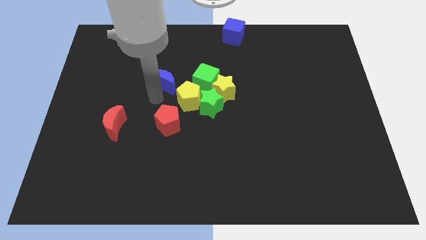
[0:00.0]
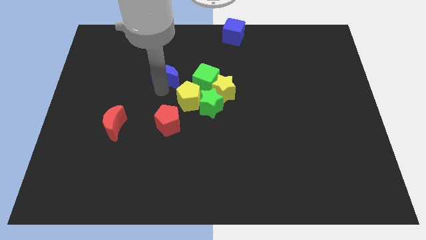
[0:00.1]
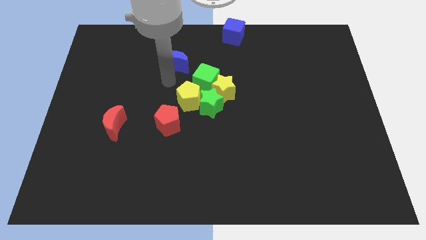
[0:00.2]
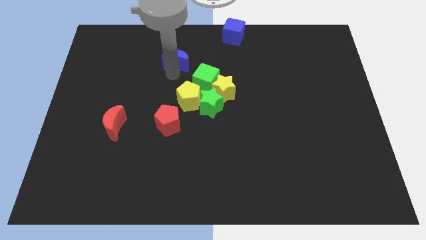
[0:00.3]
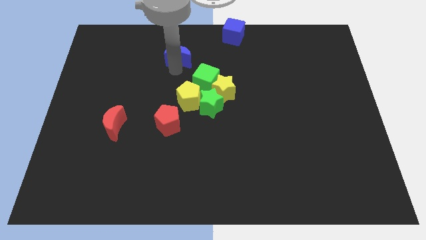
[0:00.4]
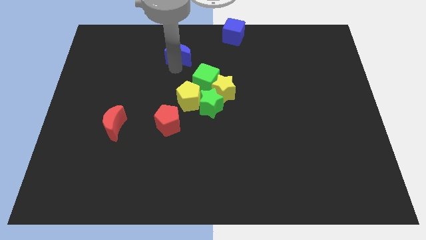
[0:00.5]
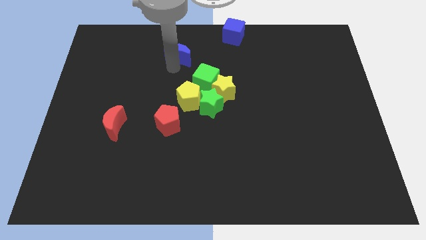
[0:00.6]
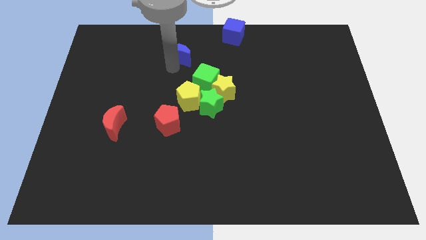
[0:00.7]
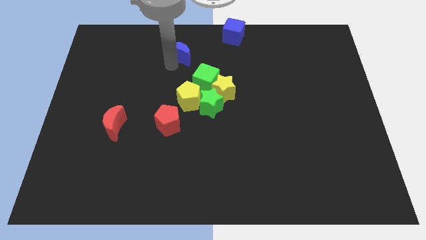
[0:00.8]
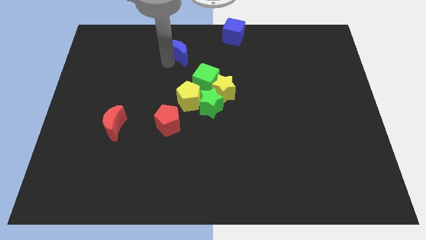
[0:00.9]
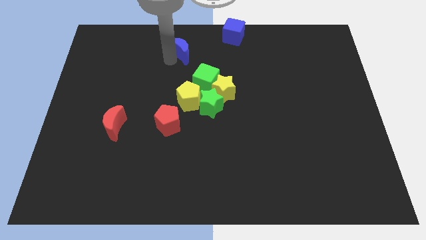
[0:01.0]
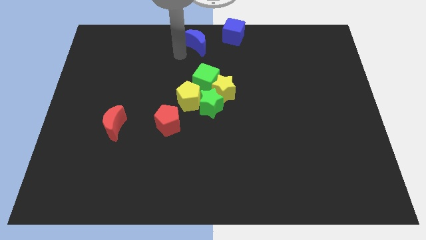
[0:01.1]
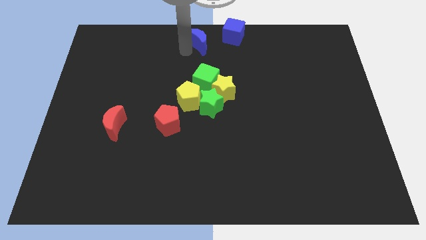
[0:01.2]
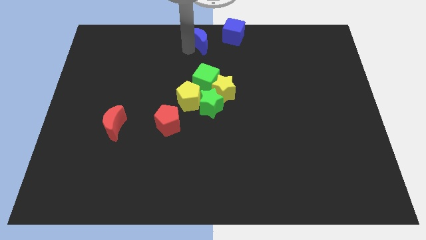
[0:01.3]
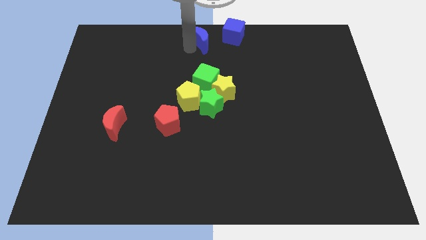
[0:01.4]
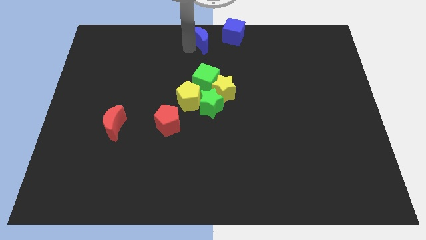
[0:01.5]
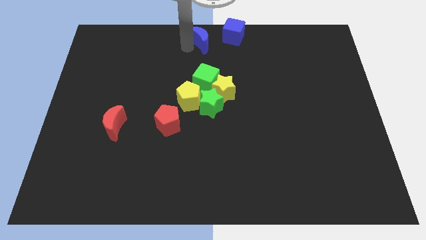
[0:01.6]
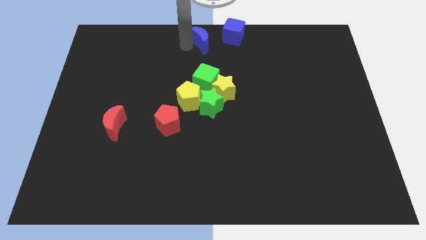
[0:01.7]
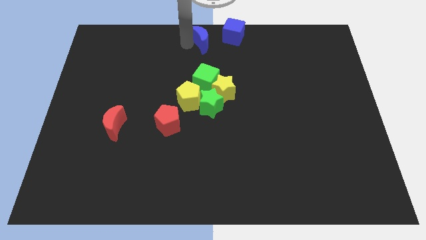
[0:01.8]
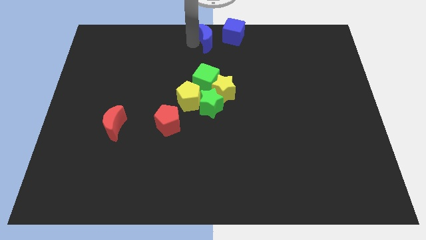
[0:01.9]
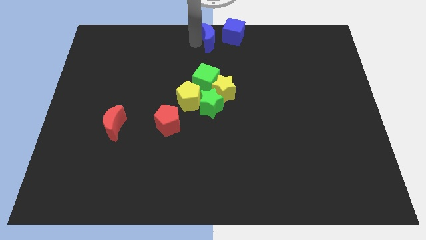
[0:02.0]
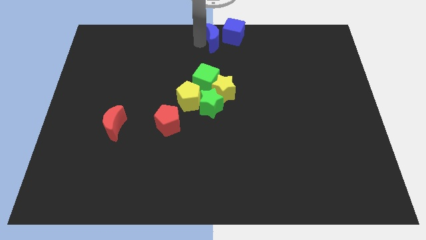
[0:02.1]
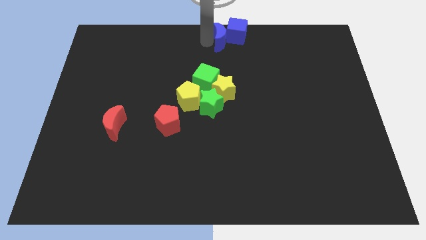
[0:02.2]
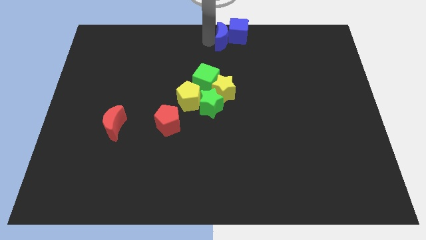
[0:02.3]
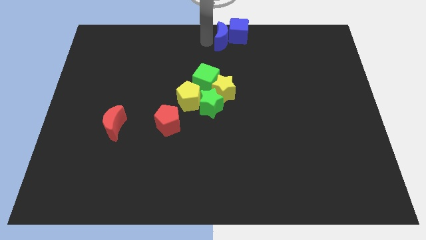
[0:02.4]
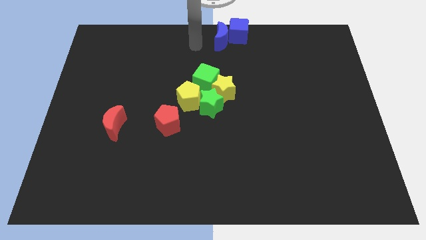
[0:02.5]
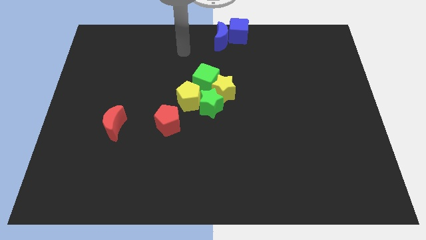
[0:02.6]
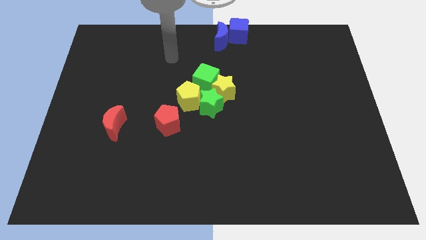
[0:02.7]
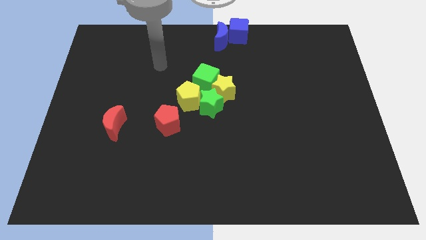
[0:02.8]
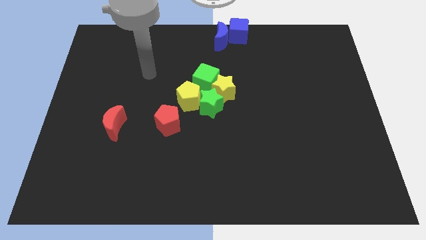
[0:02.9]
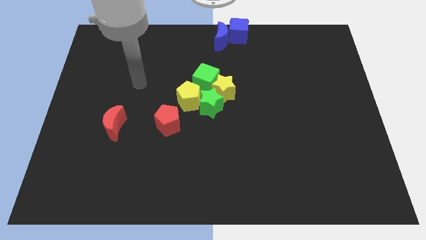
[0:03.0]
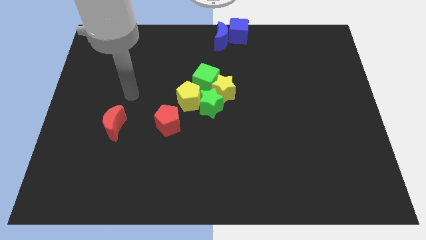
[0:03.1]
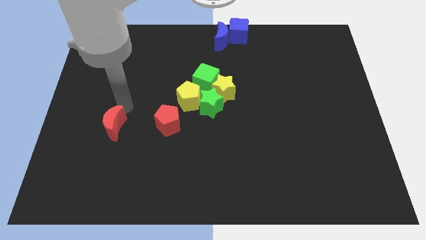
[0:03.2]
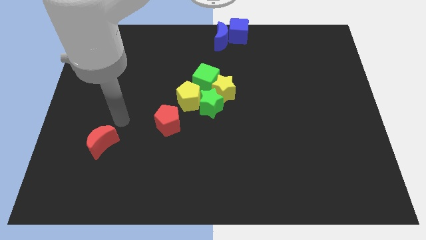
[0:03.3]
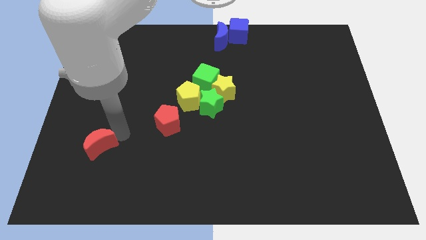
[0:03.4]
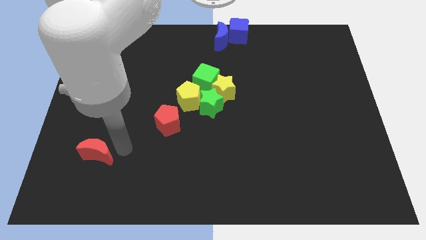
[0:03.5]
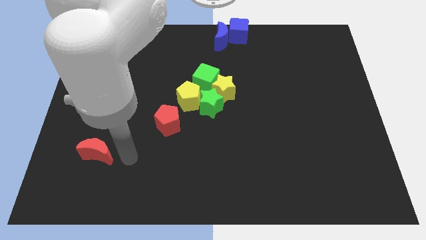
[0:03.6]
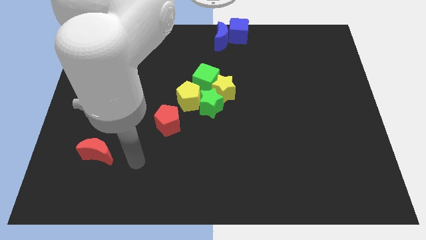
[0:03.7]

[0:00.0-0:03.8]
move blue moon into blue cube

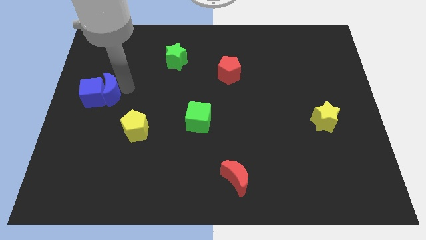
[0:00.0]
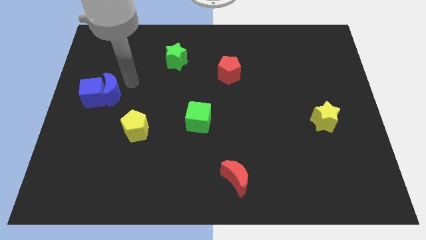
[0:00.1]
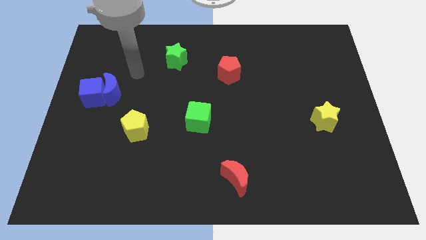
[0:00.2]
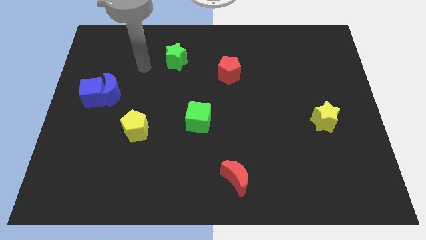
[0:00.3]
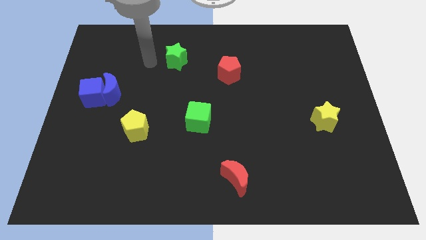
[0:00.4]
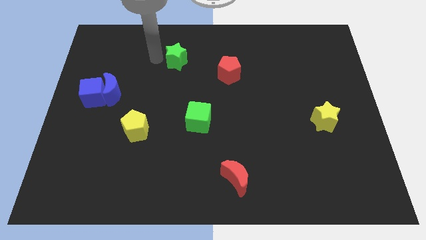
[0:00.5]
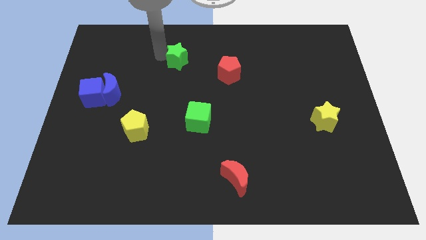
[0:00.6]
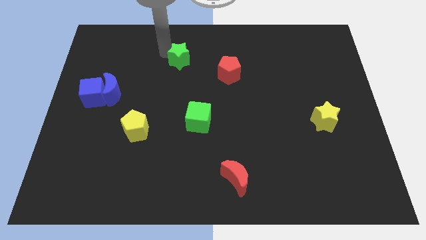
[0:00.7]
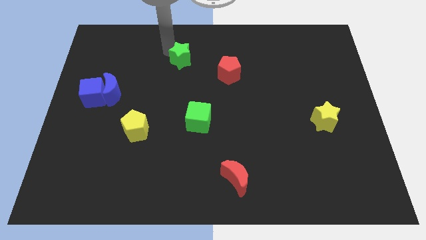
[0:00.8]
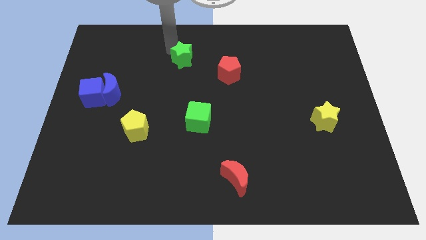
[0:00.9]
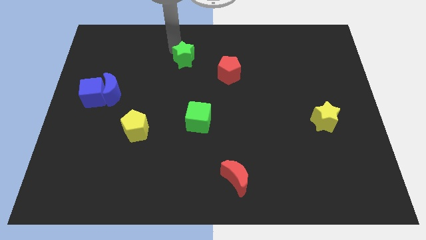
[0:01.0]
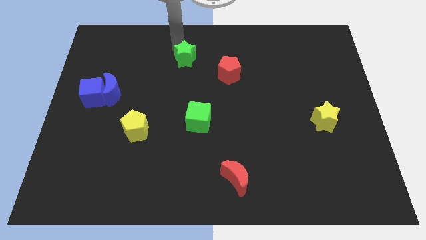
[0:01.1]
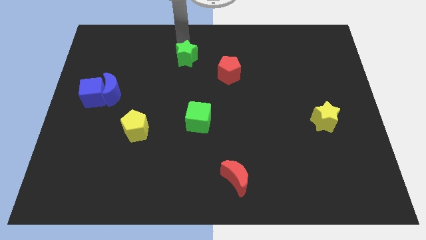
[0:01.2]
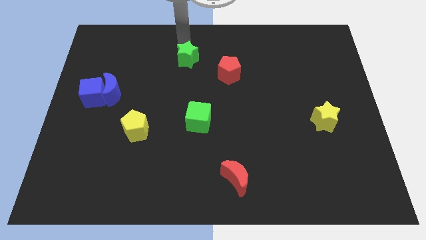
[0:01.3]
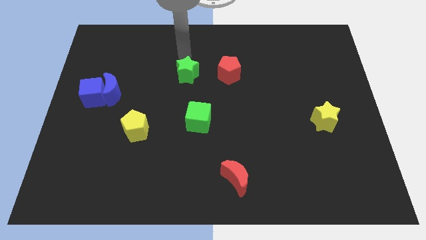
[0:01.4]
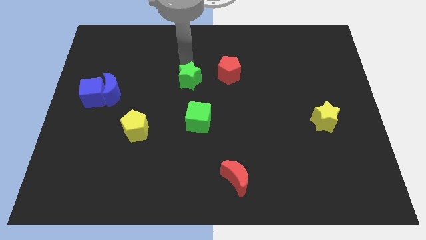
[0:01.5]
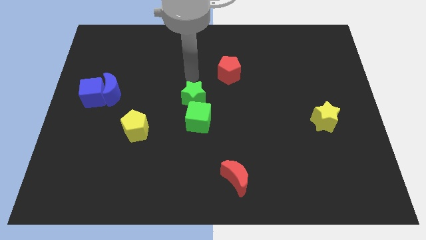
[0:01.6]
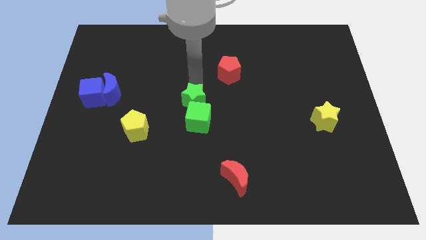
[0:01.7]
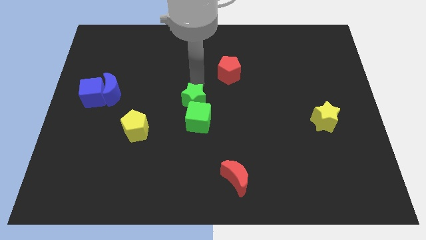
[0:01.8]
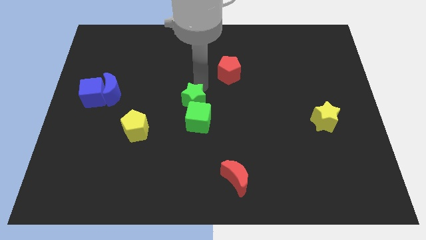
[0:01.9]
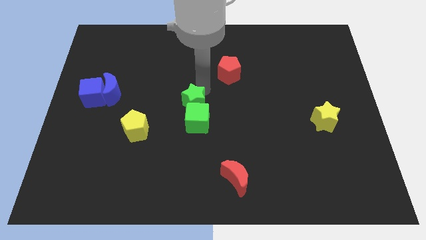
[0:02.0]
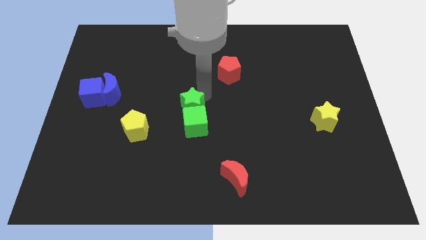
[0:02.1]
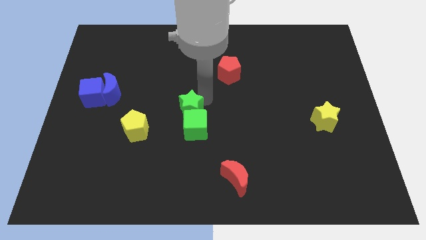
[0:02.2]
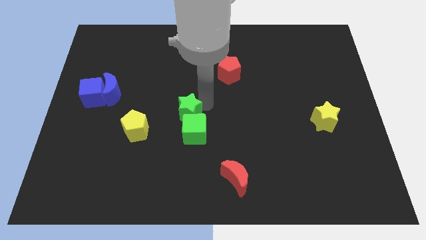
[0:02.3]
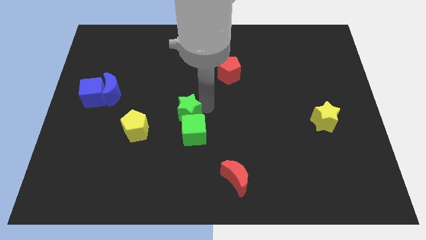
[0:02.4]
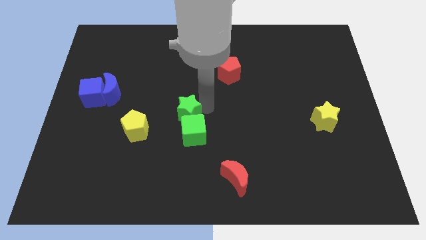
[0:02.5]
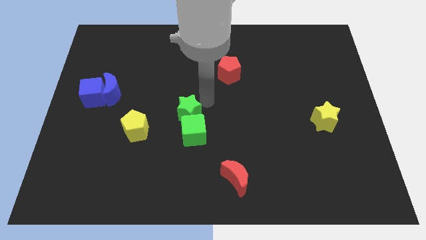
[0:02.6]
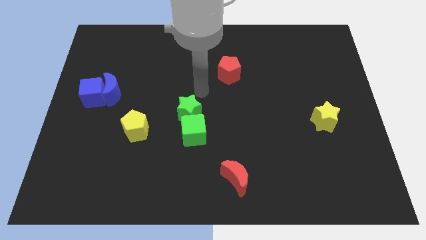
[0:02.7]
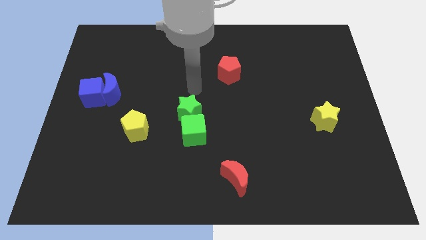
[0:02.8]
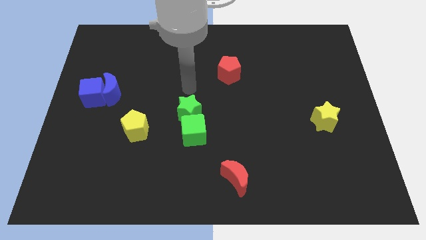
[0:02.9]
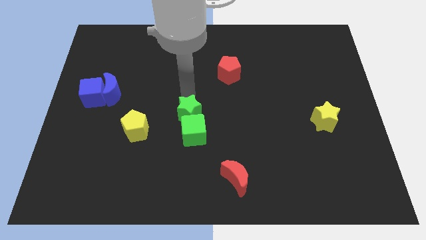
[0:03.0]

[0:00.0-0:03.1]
move the green star on the top of the green cube

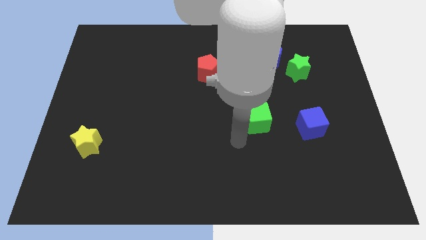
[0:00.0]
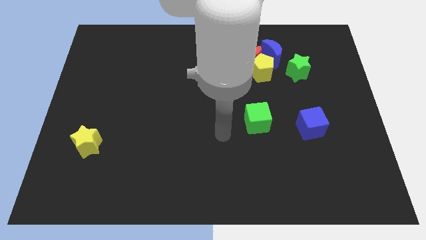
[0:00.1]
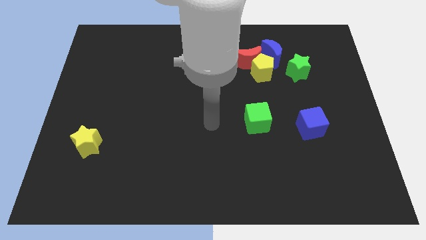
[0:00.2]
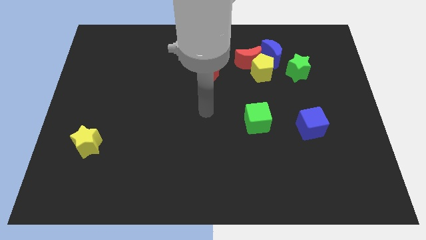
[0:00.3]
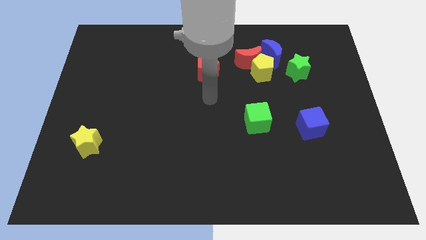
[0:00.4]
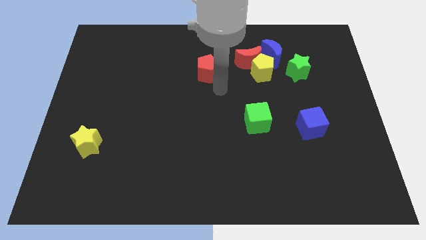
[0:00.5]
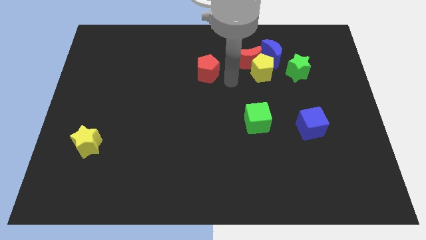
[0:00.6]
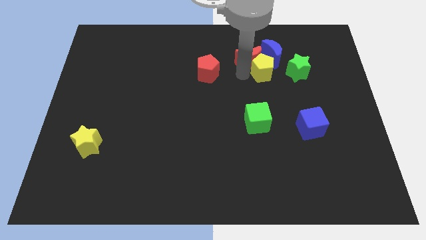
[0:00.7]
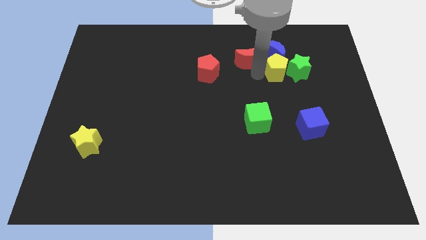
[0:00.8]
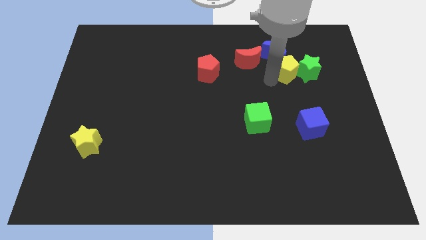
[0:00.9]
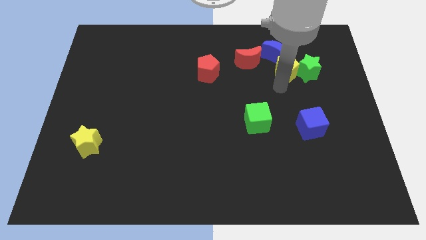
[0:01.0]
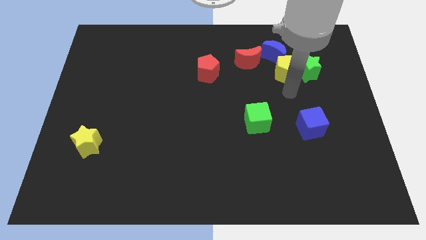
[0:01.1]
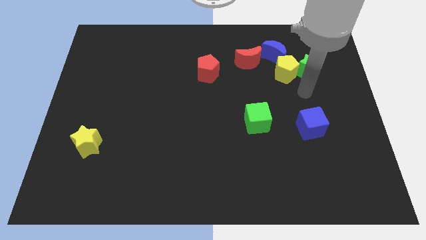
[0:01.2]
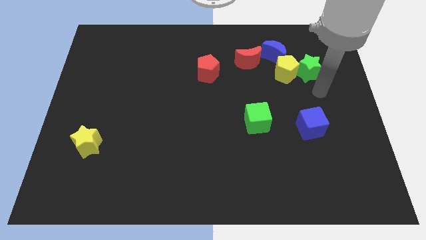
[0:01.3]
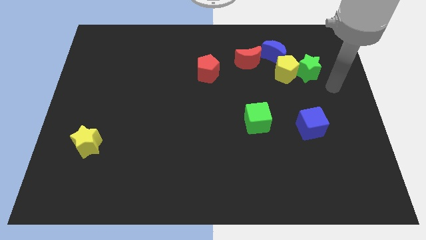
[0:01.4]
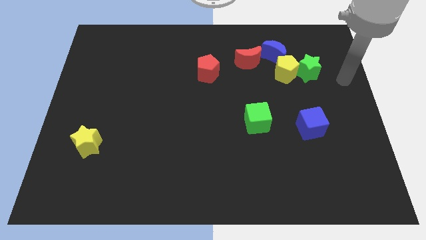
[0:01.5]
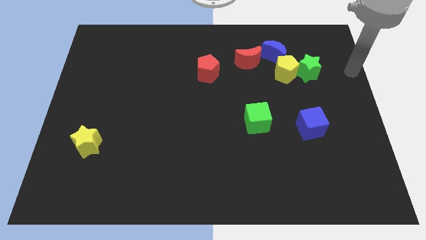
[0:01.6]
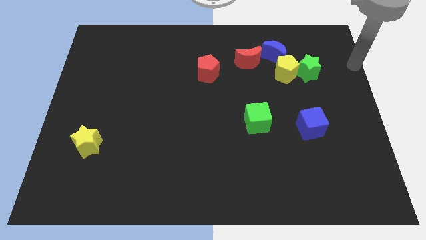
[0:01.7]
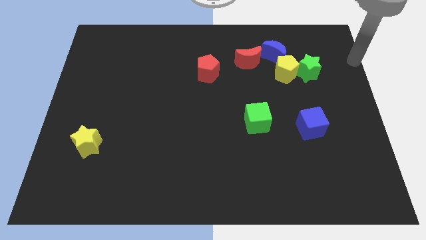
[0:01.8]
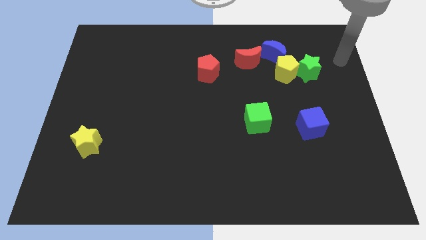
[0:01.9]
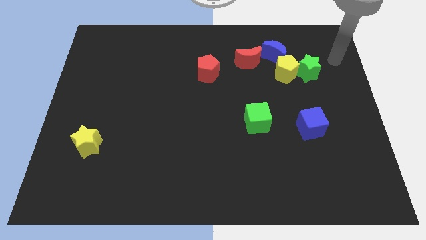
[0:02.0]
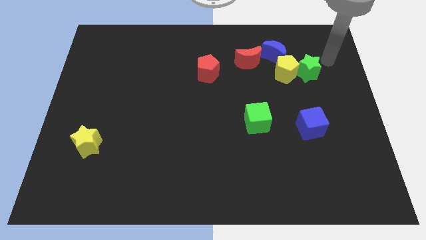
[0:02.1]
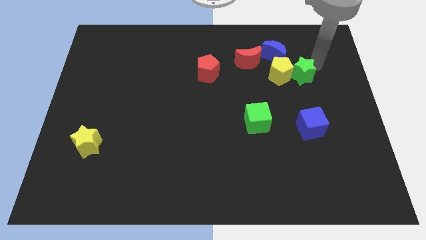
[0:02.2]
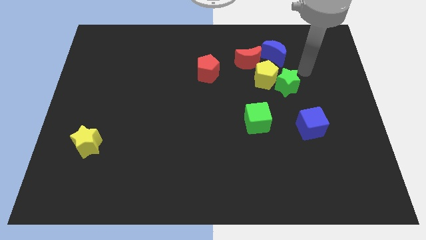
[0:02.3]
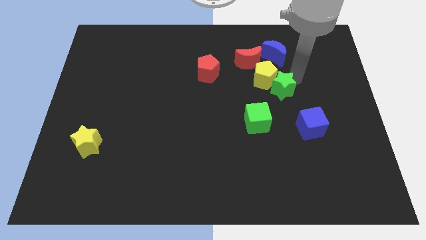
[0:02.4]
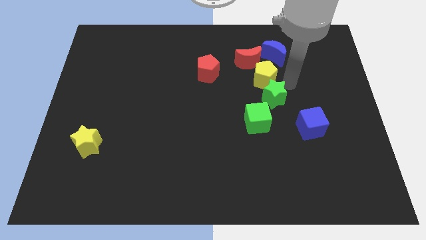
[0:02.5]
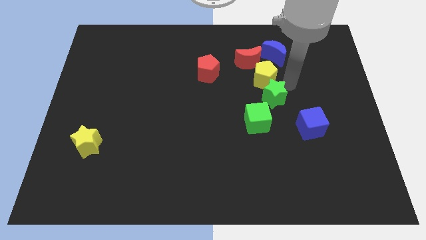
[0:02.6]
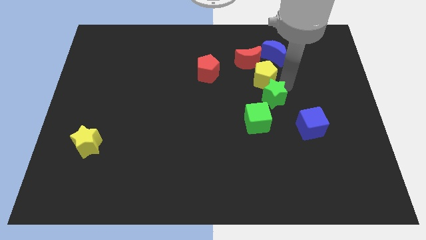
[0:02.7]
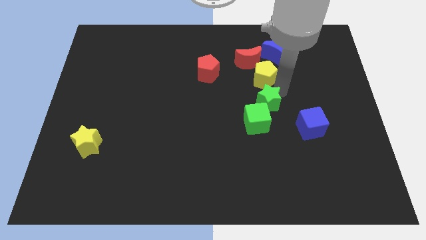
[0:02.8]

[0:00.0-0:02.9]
push the yellow pentagon into the green star
